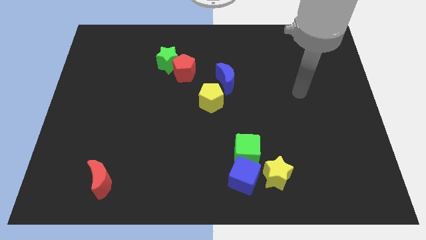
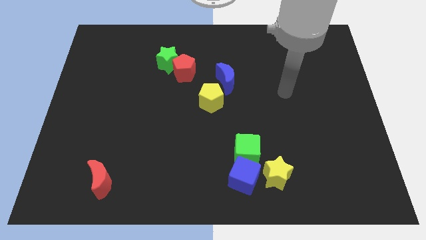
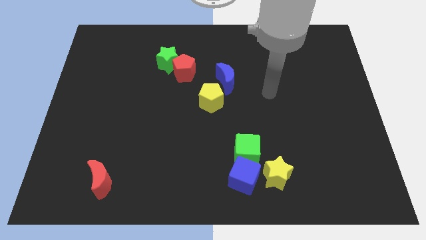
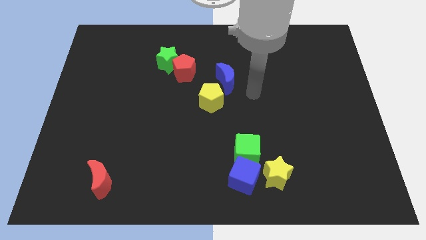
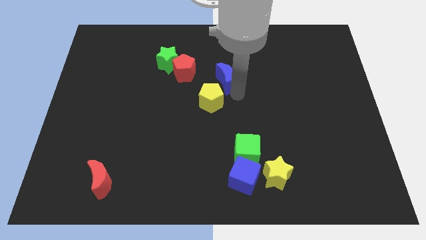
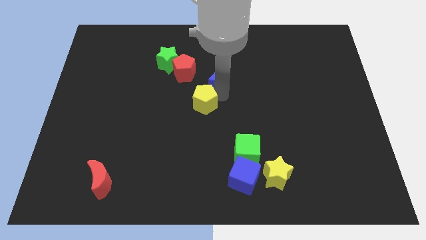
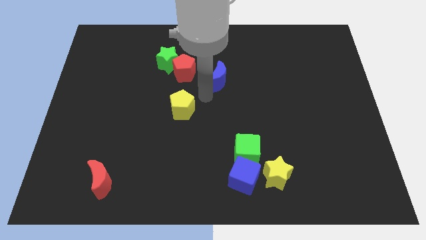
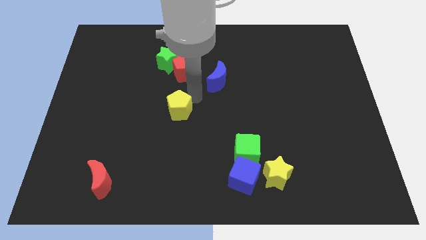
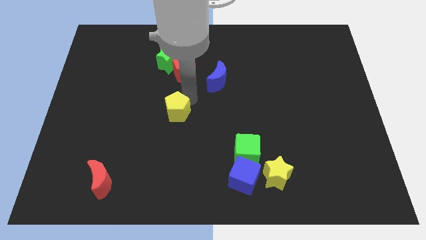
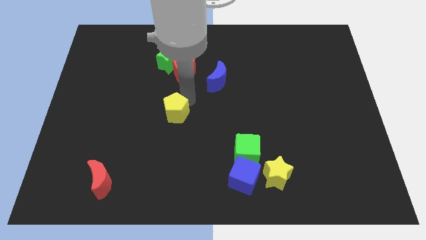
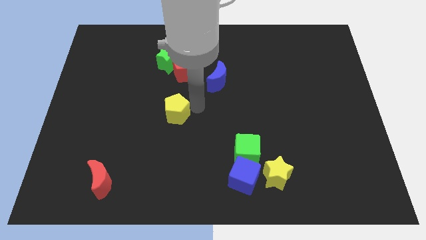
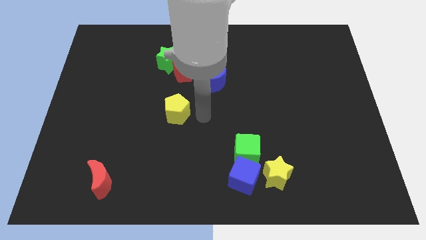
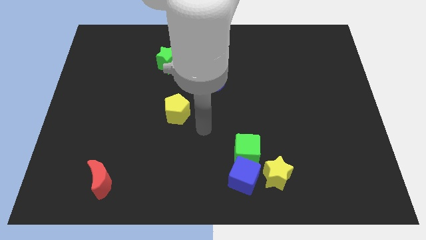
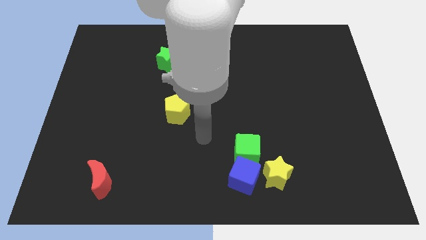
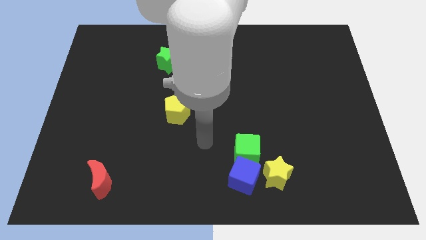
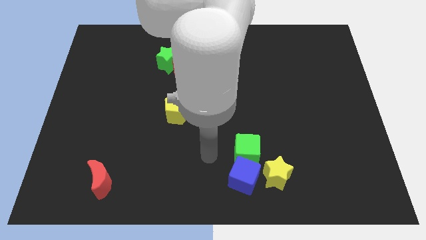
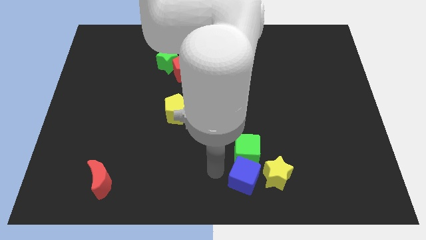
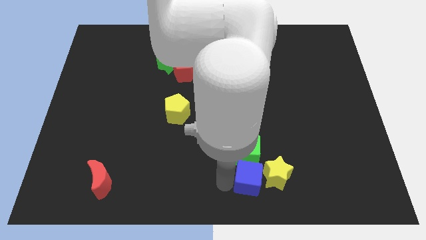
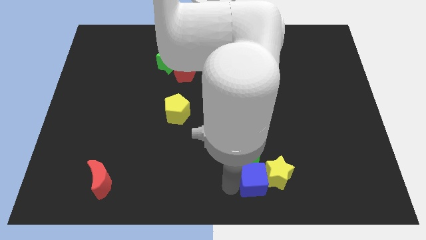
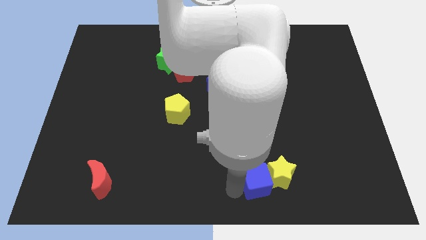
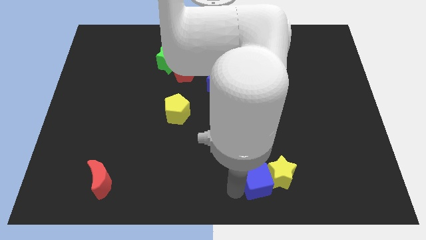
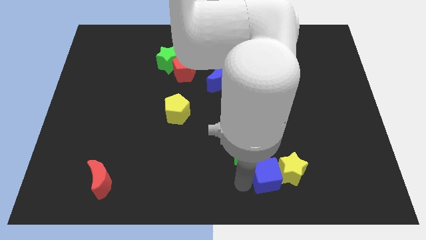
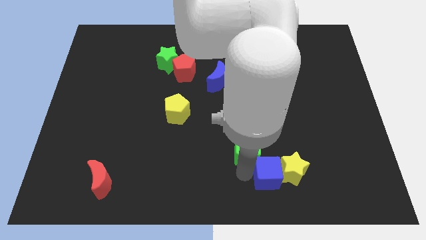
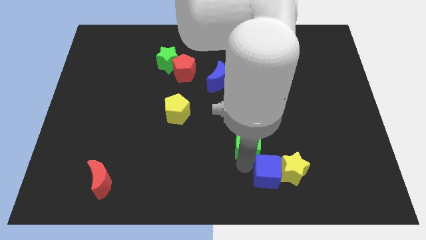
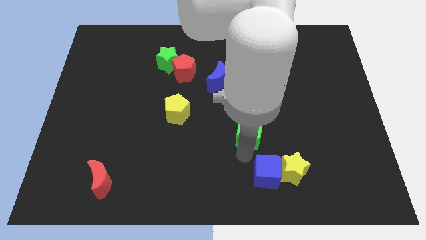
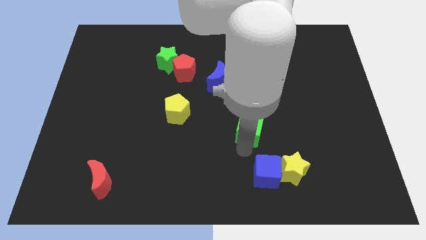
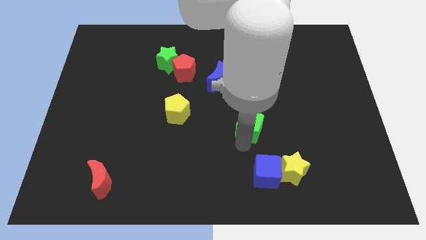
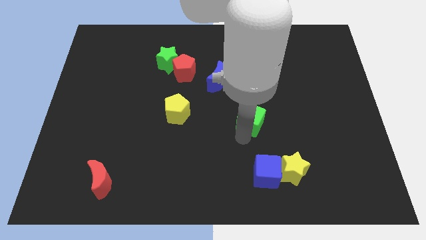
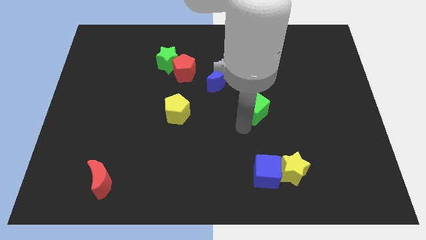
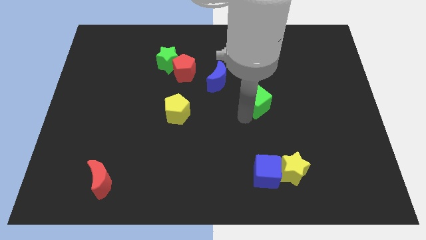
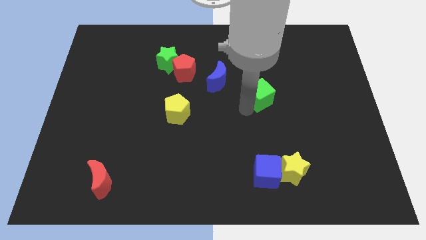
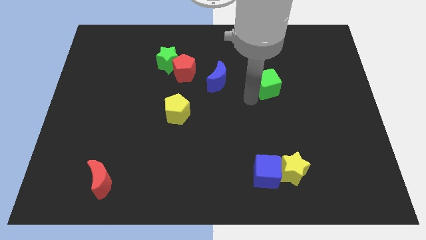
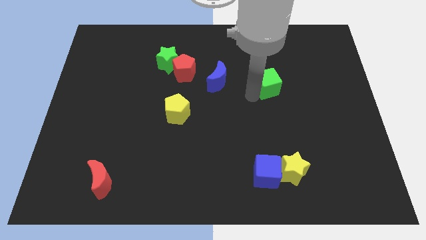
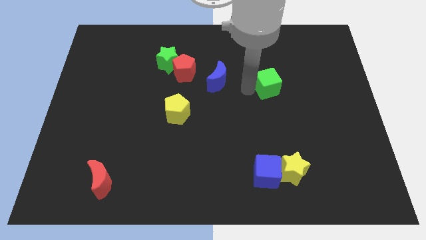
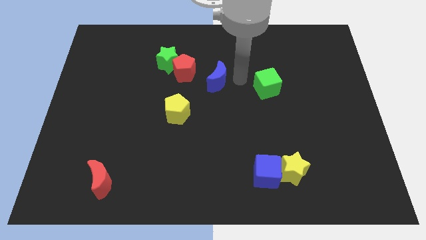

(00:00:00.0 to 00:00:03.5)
place the green cube to the right of blue moon

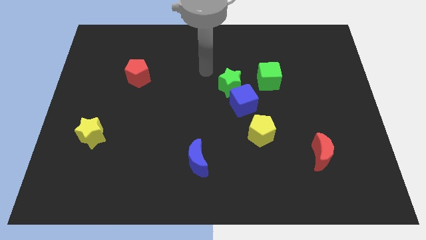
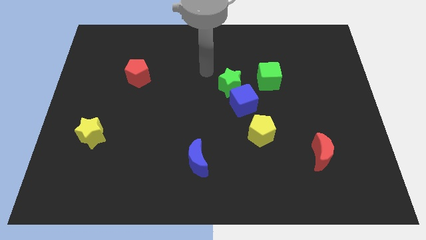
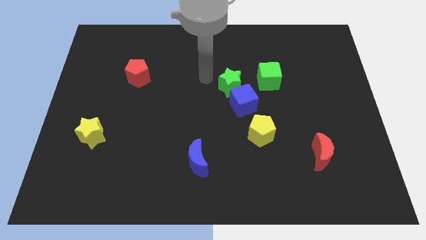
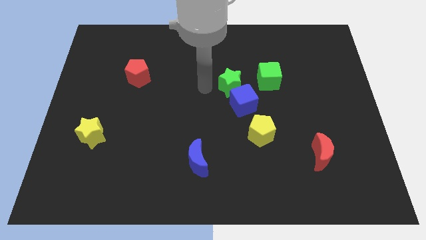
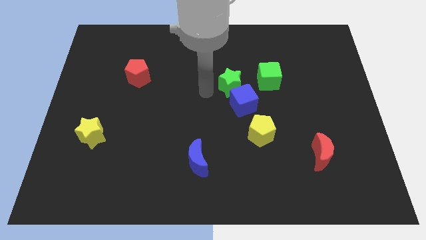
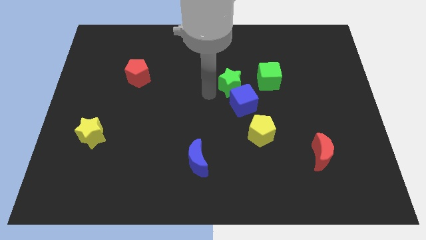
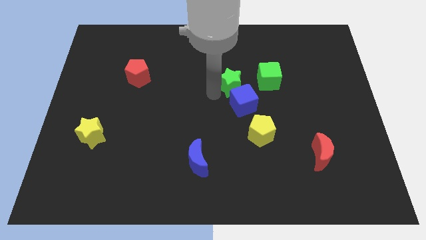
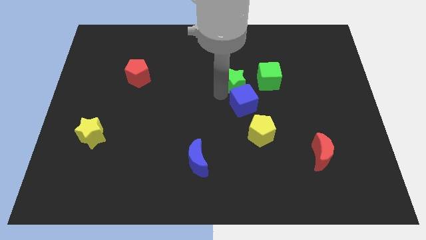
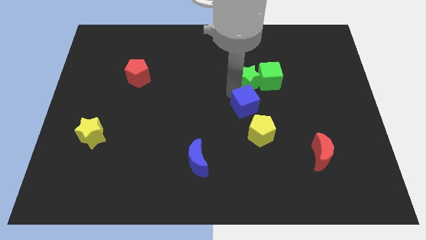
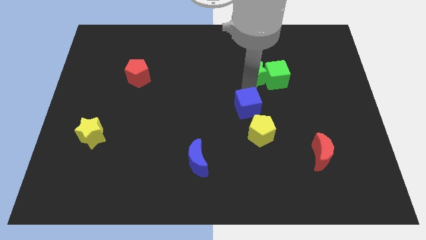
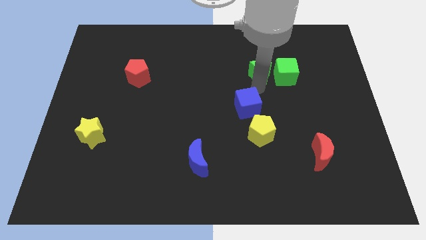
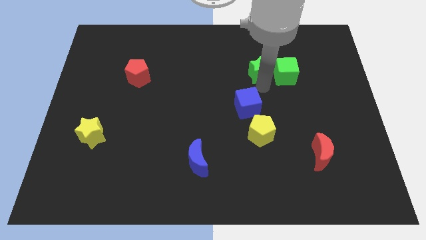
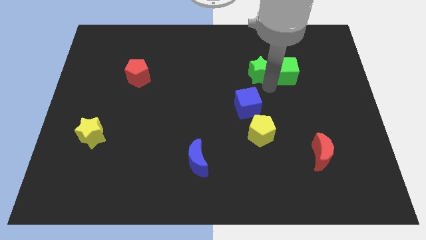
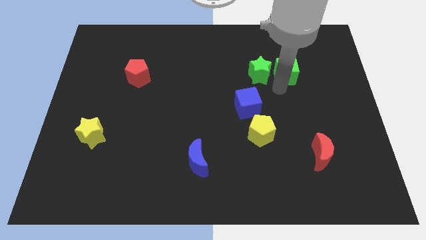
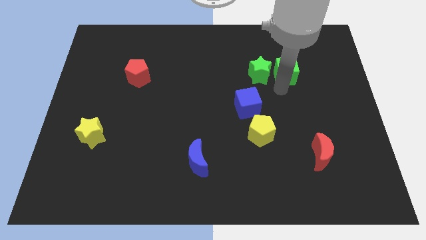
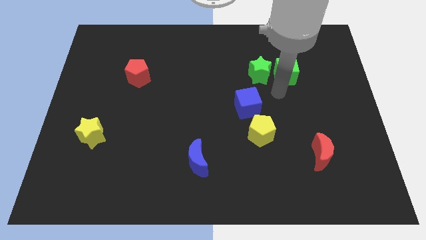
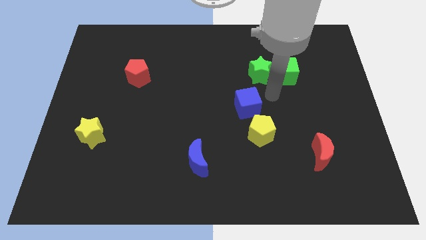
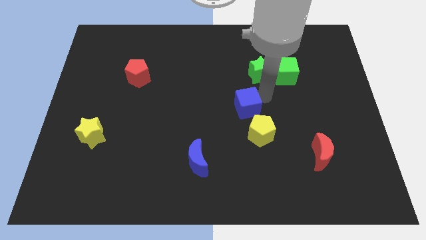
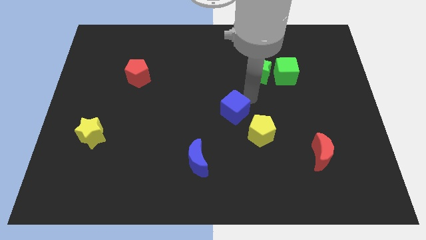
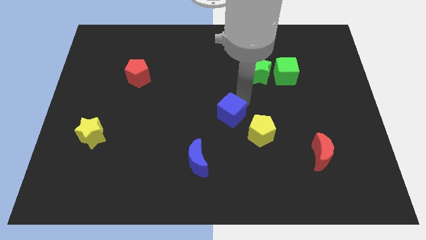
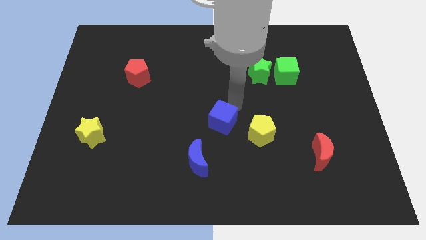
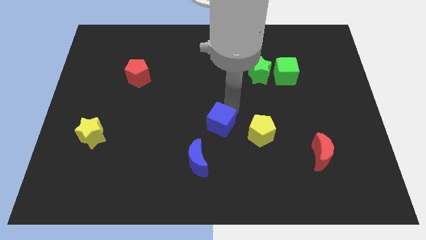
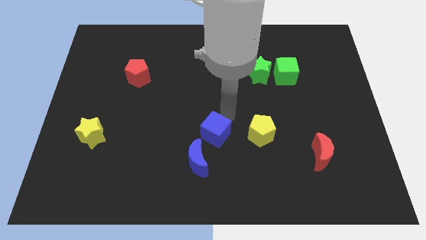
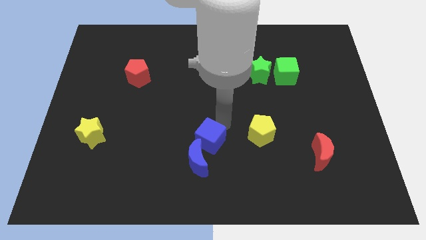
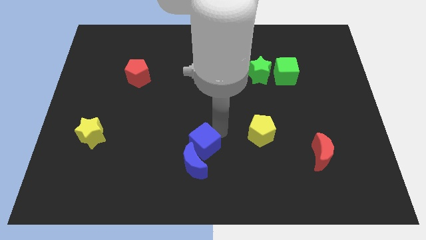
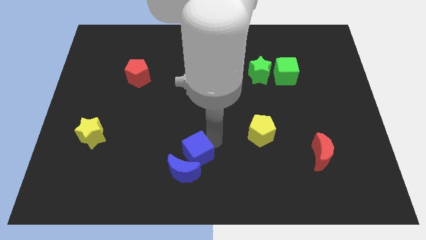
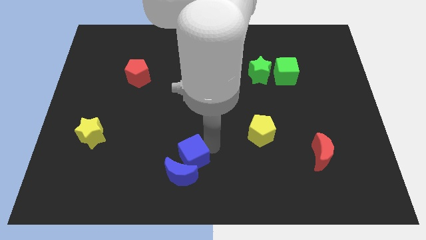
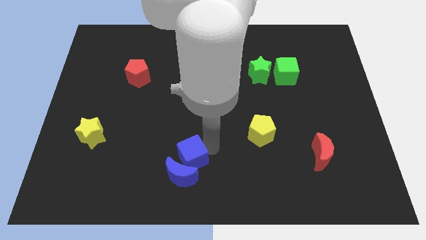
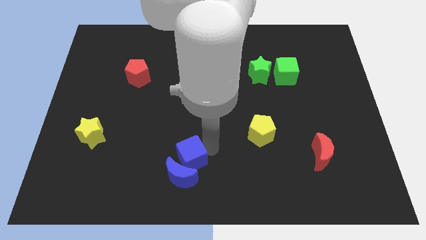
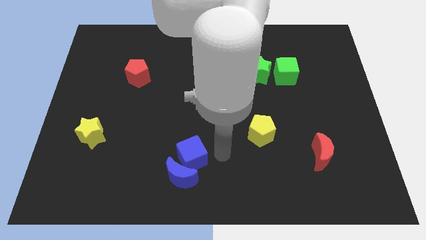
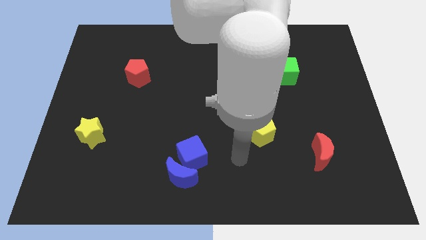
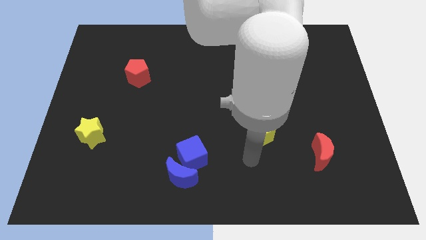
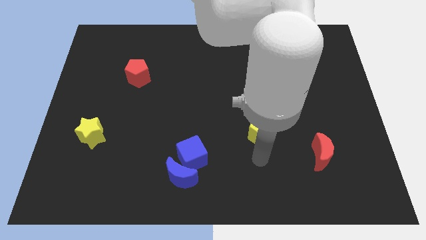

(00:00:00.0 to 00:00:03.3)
push the blue cube into blue moon

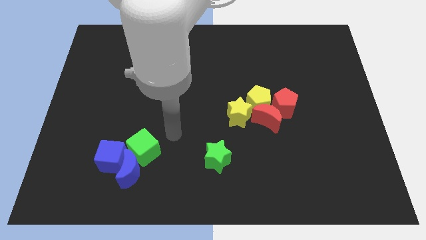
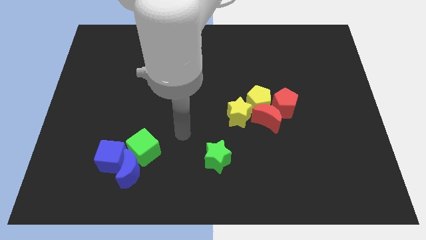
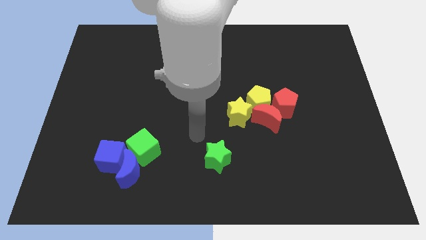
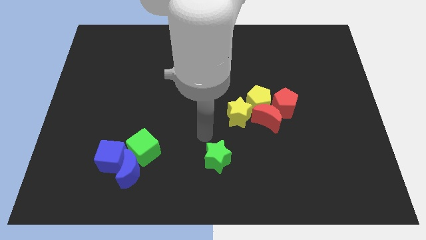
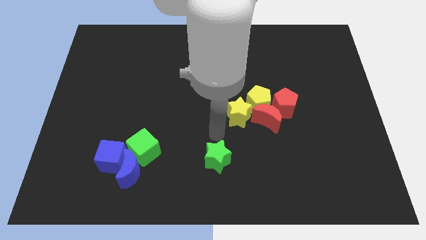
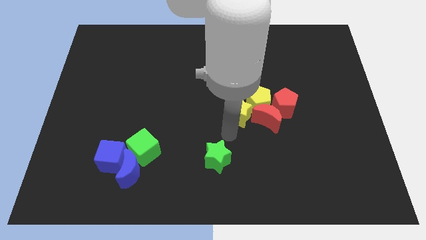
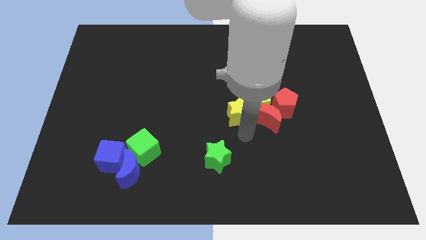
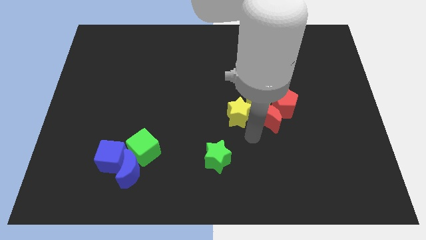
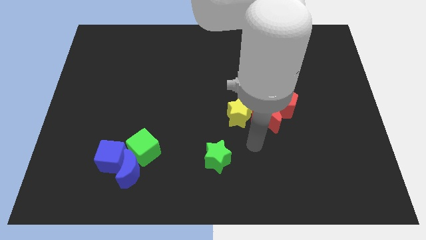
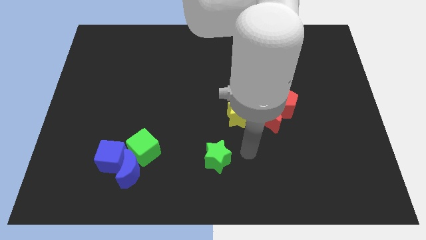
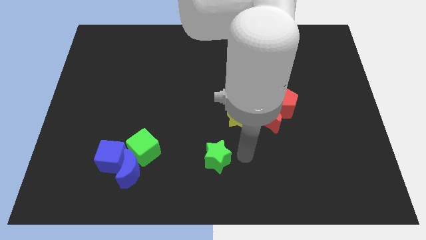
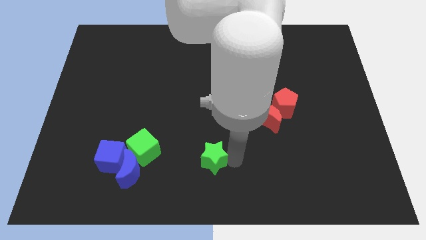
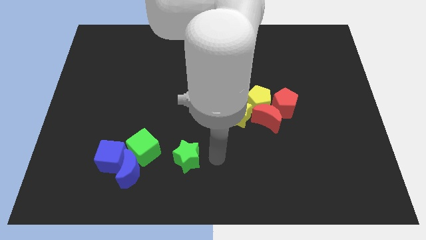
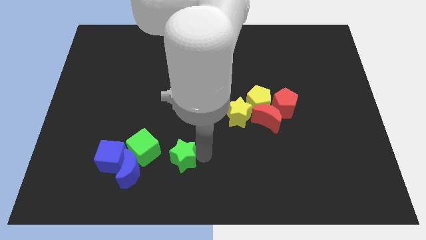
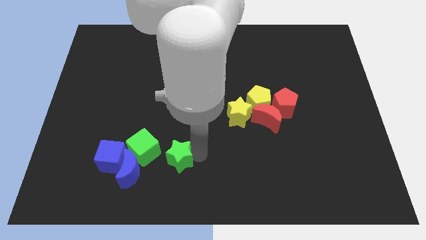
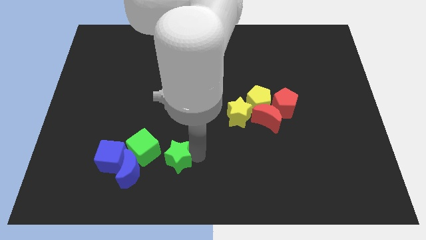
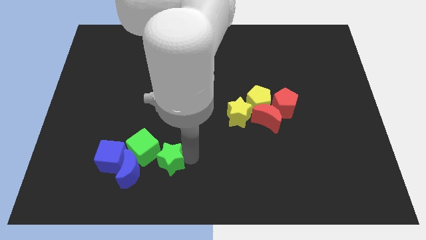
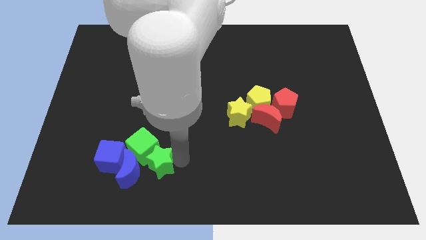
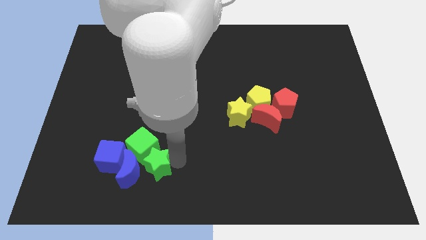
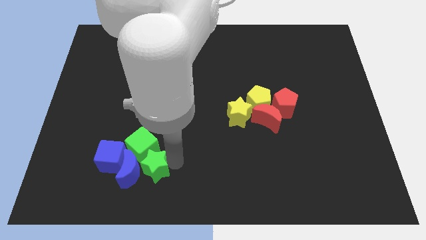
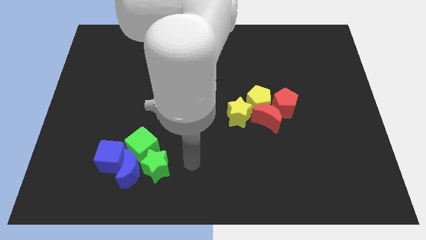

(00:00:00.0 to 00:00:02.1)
slide the green star to the bottom right side of the green cube
